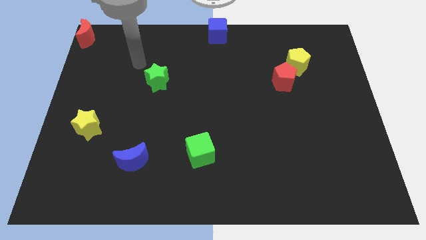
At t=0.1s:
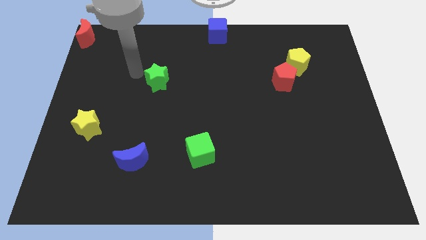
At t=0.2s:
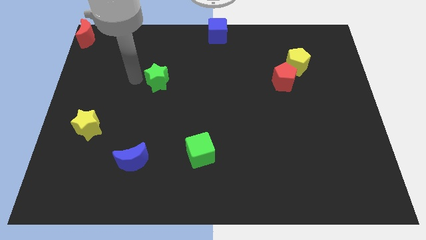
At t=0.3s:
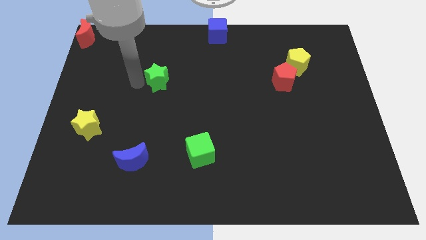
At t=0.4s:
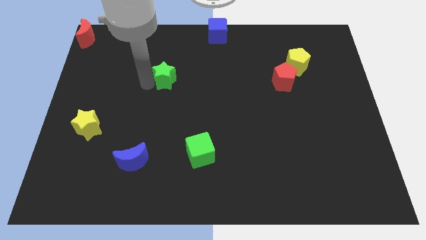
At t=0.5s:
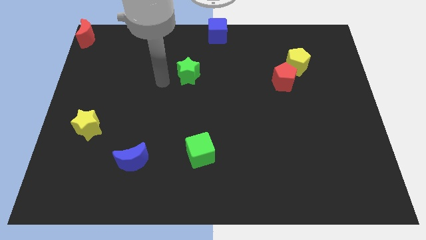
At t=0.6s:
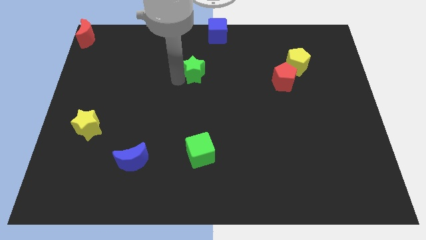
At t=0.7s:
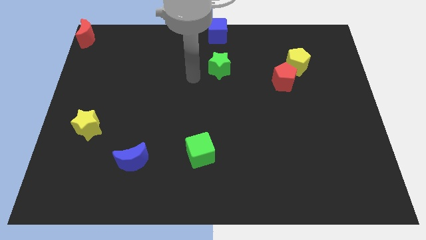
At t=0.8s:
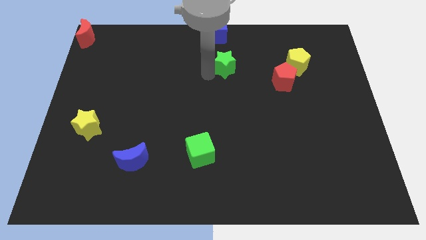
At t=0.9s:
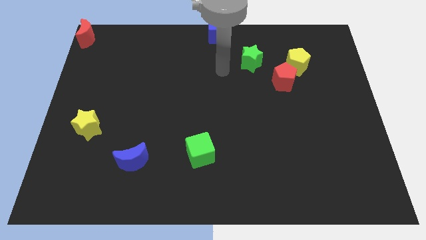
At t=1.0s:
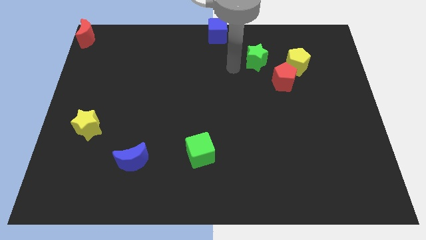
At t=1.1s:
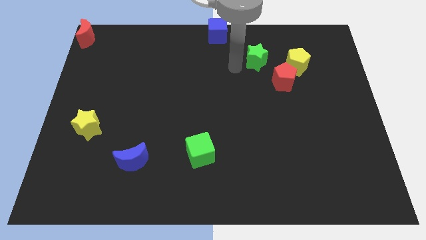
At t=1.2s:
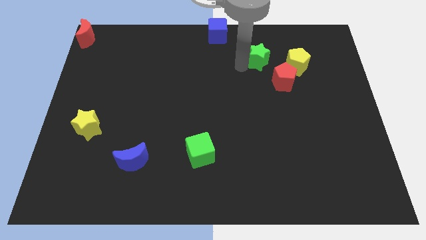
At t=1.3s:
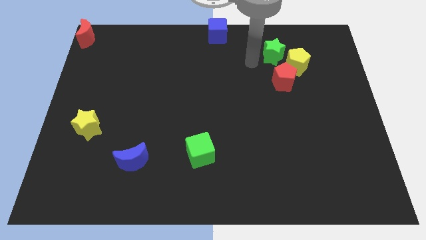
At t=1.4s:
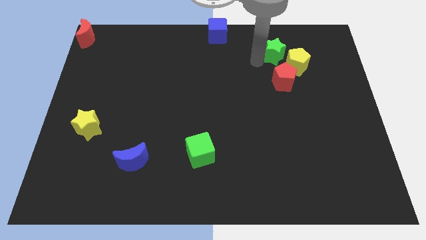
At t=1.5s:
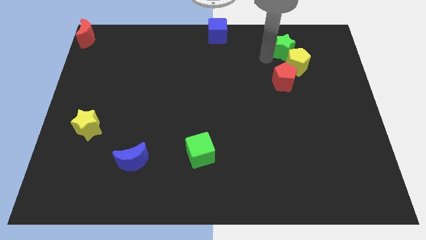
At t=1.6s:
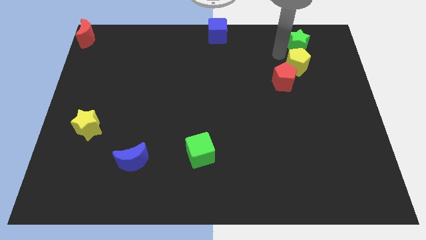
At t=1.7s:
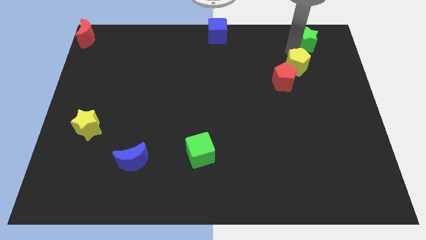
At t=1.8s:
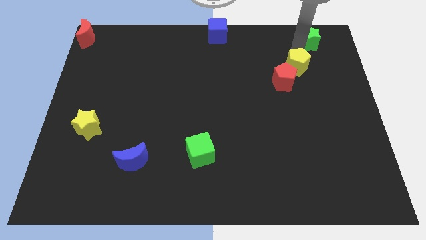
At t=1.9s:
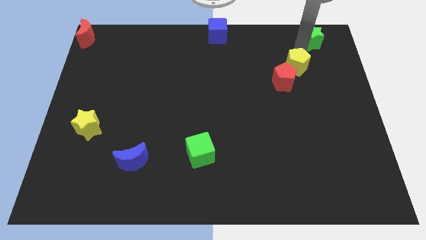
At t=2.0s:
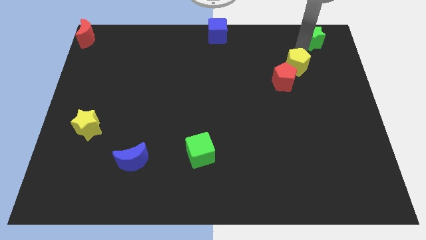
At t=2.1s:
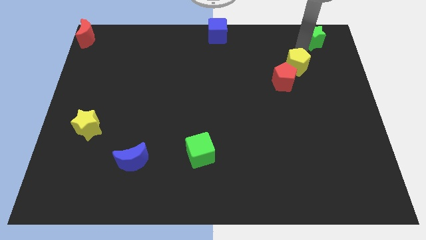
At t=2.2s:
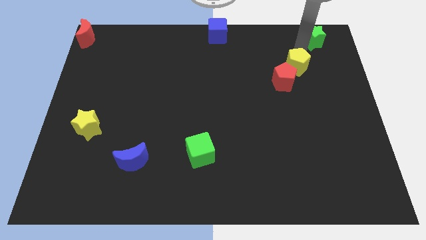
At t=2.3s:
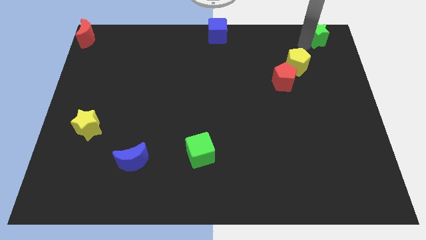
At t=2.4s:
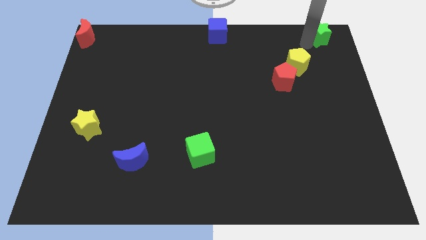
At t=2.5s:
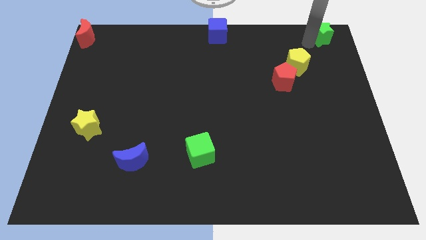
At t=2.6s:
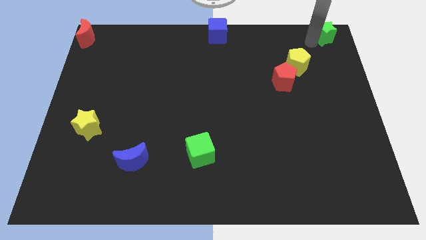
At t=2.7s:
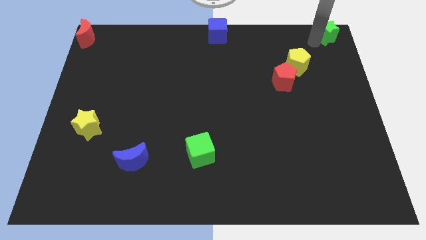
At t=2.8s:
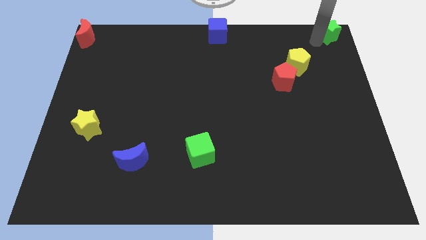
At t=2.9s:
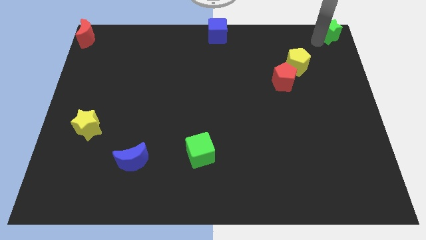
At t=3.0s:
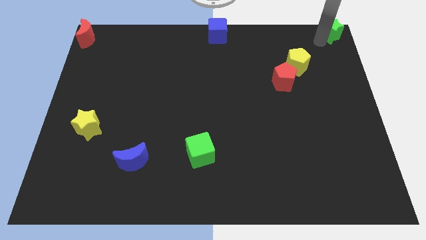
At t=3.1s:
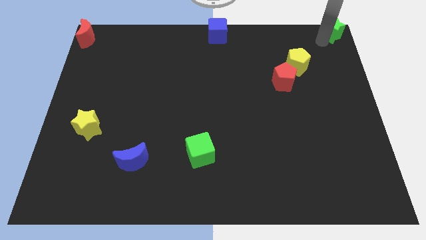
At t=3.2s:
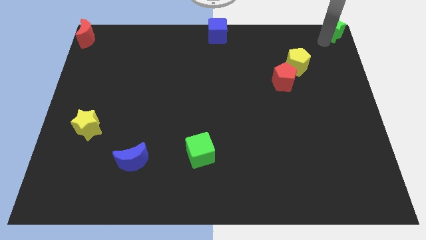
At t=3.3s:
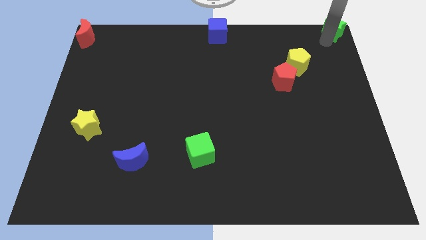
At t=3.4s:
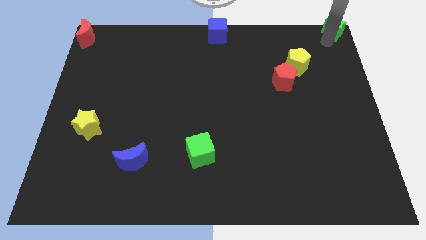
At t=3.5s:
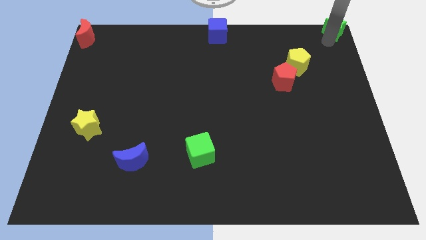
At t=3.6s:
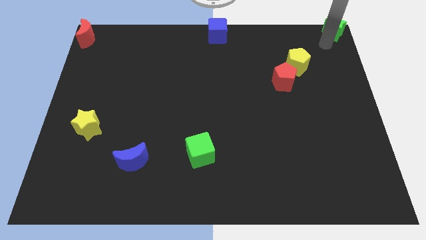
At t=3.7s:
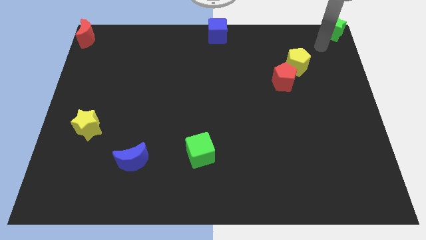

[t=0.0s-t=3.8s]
place the green star to the top right corner

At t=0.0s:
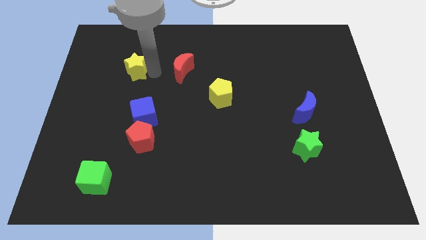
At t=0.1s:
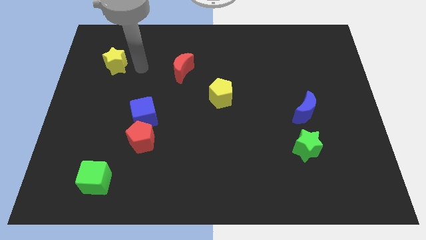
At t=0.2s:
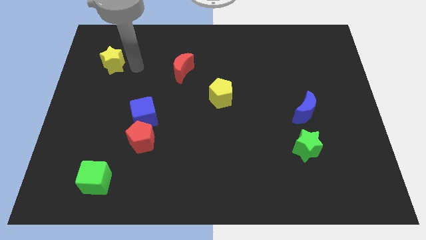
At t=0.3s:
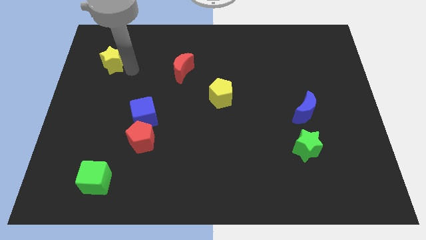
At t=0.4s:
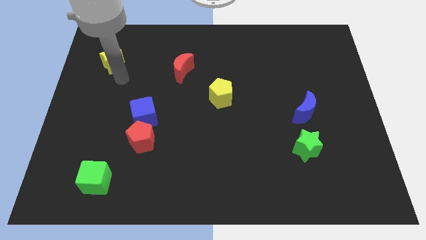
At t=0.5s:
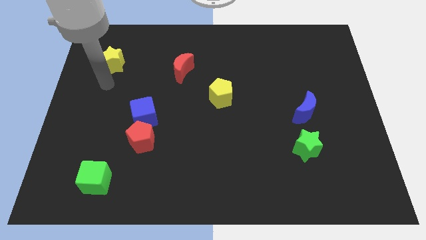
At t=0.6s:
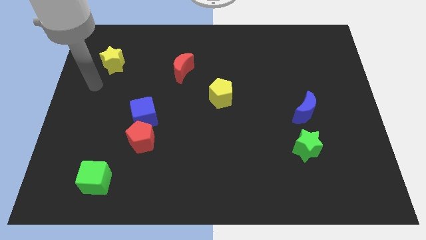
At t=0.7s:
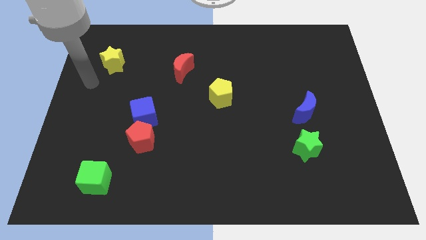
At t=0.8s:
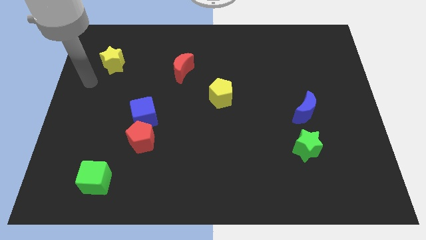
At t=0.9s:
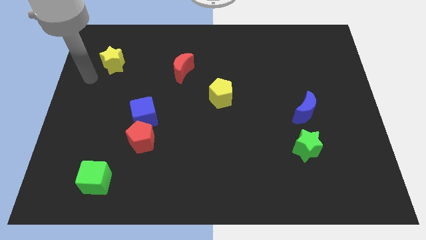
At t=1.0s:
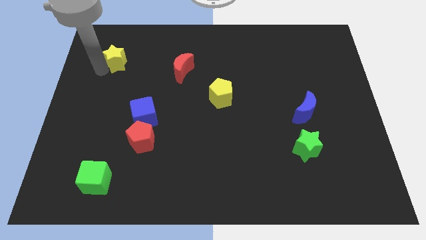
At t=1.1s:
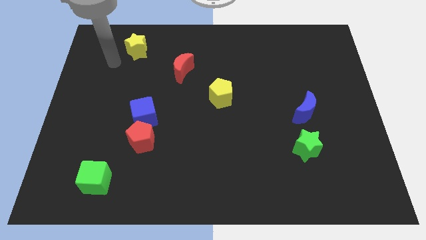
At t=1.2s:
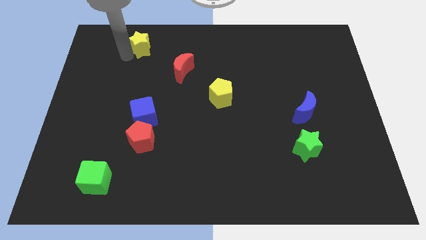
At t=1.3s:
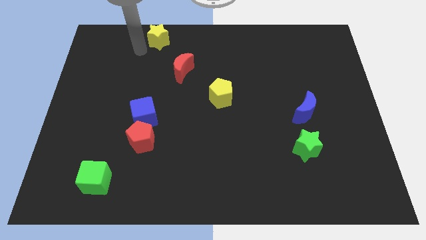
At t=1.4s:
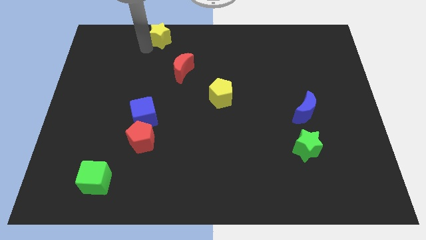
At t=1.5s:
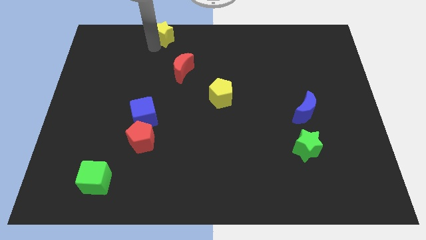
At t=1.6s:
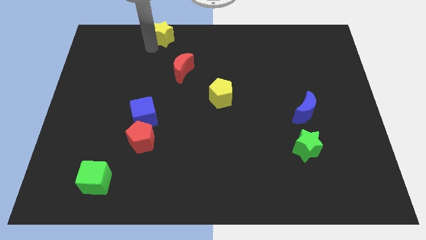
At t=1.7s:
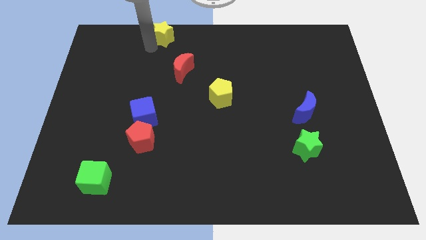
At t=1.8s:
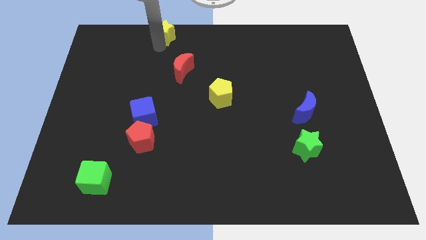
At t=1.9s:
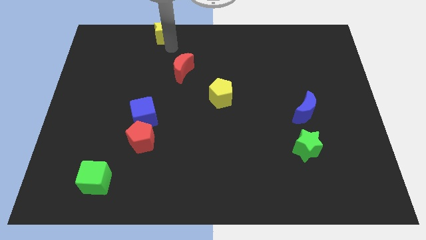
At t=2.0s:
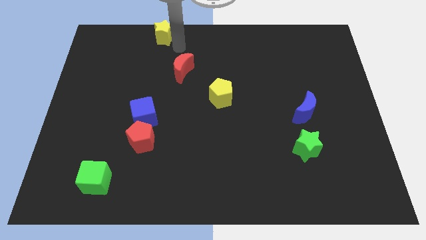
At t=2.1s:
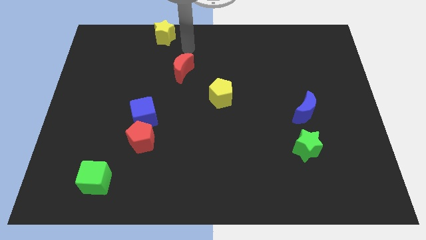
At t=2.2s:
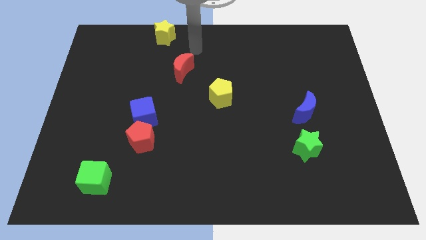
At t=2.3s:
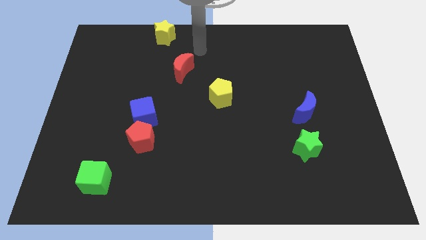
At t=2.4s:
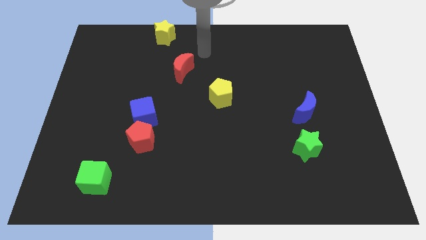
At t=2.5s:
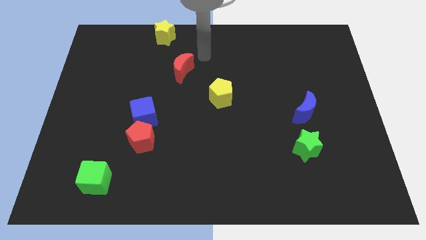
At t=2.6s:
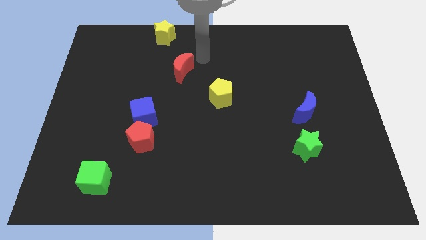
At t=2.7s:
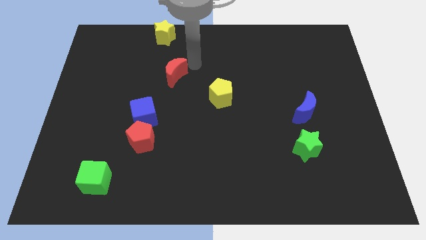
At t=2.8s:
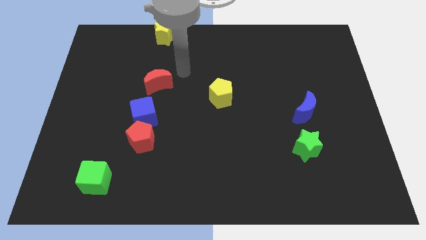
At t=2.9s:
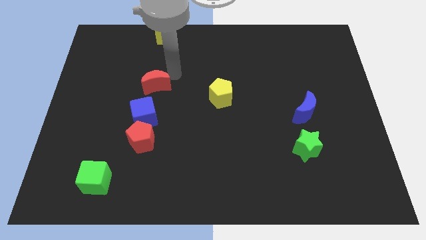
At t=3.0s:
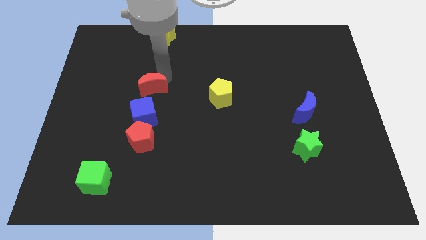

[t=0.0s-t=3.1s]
move the yellow star to the top of the board

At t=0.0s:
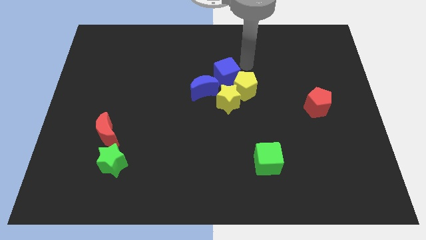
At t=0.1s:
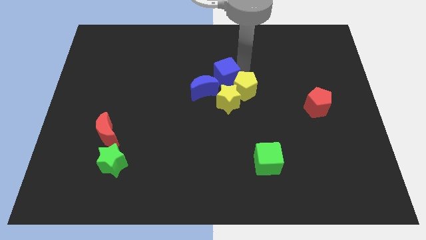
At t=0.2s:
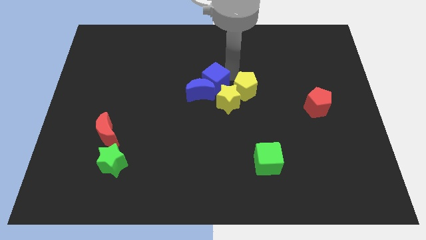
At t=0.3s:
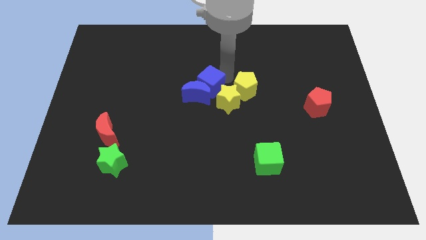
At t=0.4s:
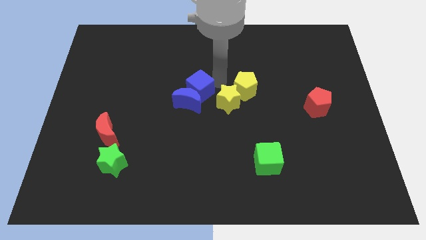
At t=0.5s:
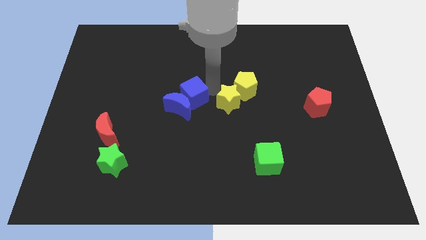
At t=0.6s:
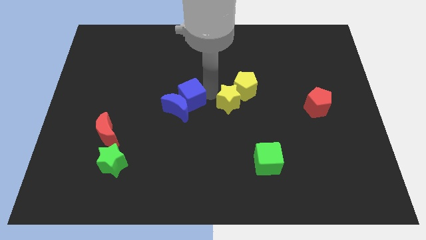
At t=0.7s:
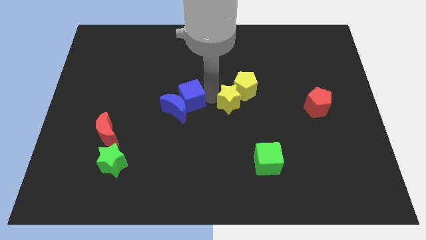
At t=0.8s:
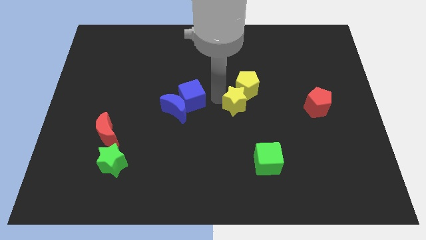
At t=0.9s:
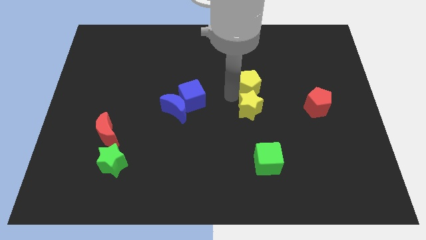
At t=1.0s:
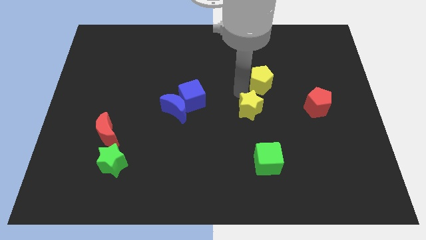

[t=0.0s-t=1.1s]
separate blue blocks and yellow blocks from each other

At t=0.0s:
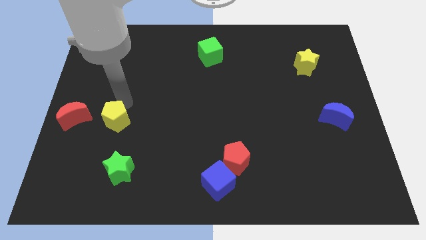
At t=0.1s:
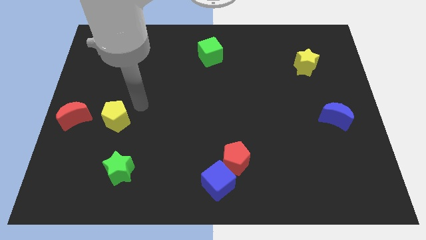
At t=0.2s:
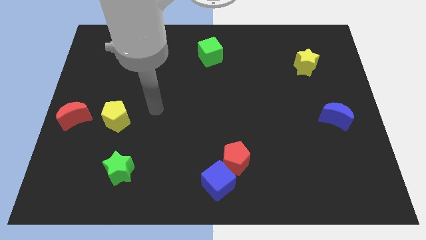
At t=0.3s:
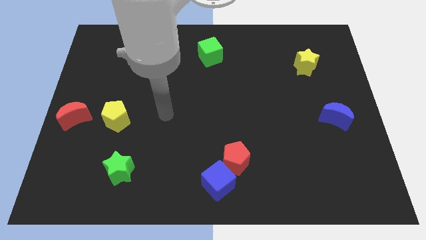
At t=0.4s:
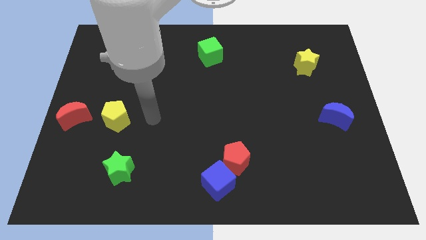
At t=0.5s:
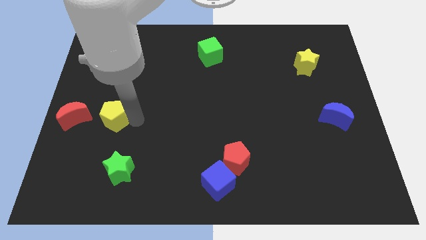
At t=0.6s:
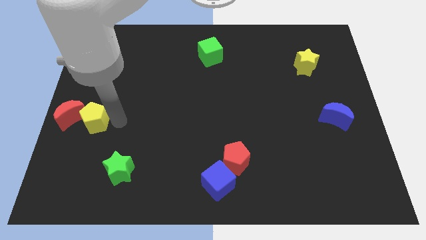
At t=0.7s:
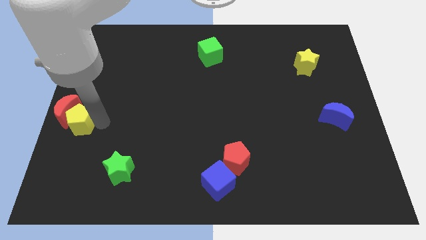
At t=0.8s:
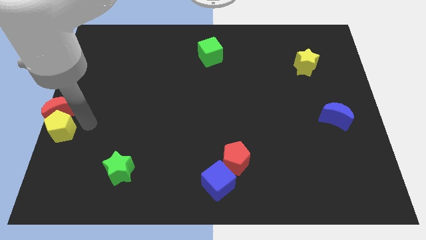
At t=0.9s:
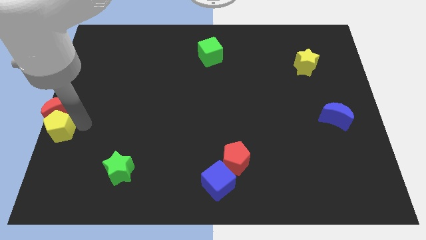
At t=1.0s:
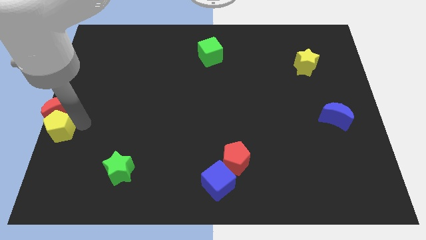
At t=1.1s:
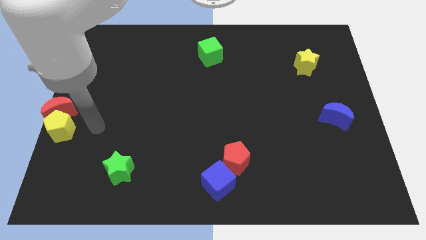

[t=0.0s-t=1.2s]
move the yellow pentagon into the red moon
